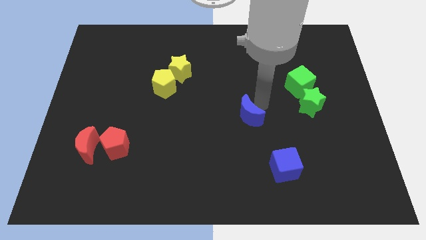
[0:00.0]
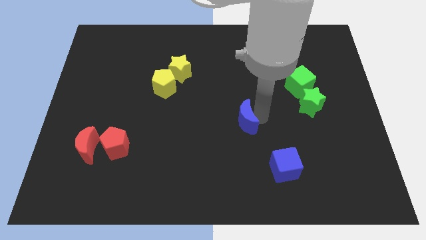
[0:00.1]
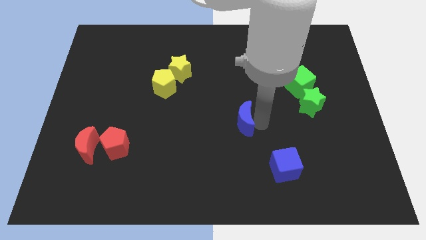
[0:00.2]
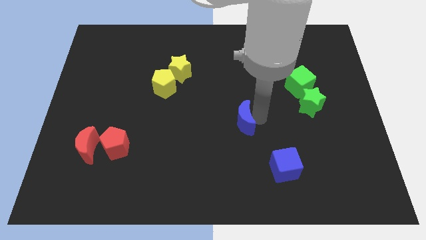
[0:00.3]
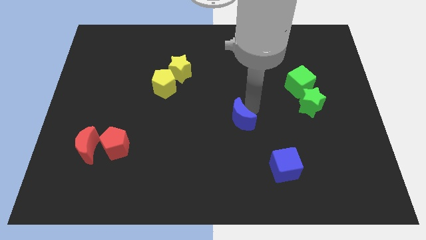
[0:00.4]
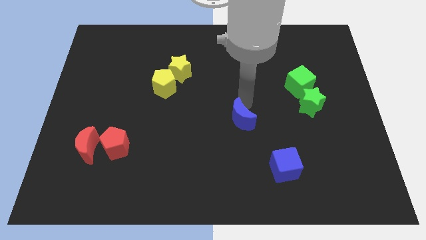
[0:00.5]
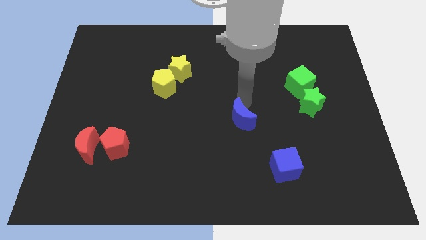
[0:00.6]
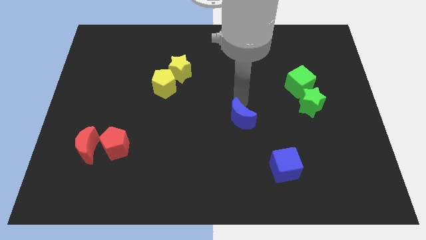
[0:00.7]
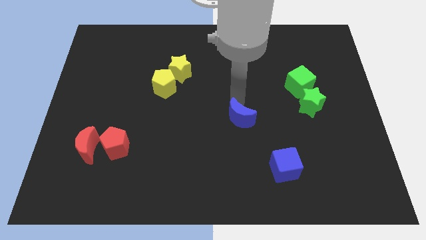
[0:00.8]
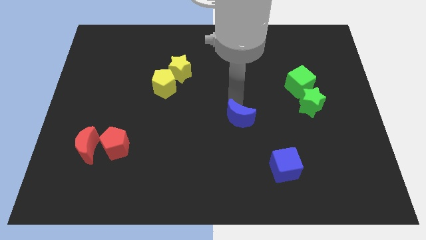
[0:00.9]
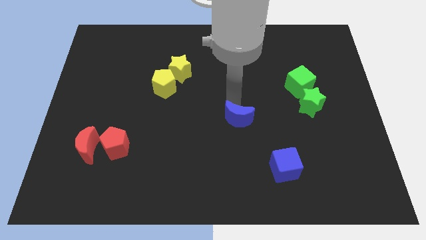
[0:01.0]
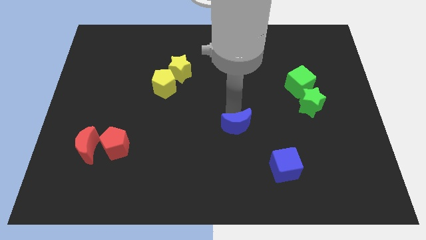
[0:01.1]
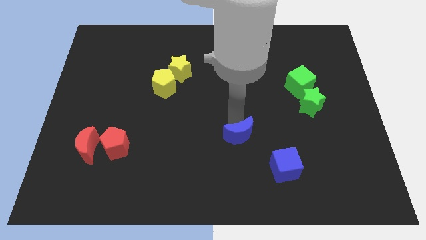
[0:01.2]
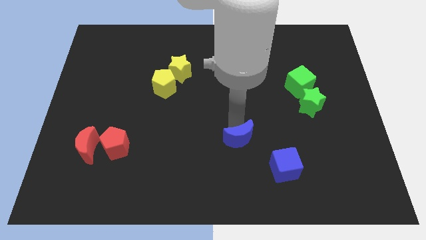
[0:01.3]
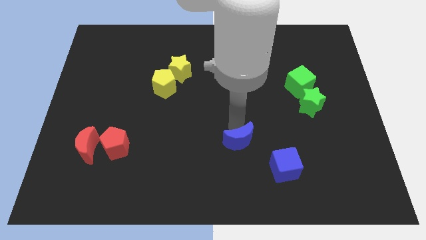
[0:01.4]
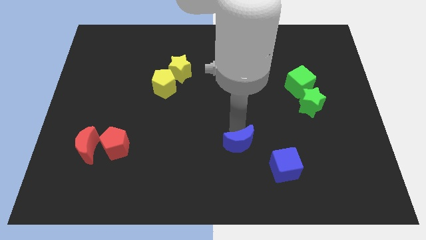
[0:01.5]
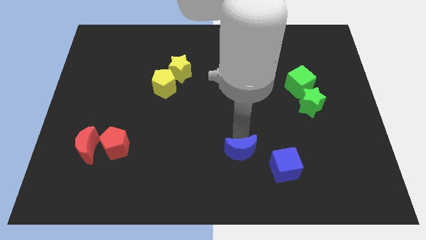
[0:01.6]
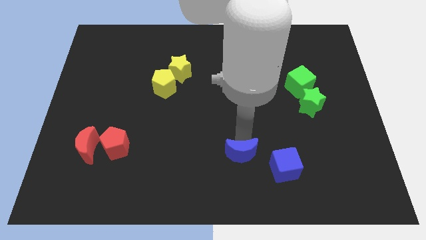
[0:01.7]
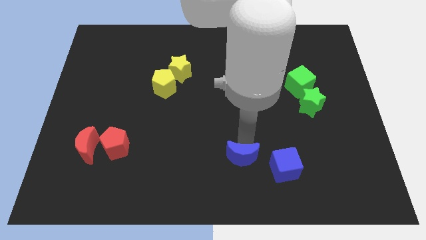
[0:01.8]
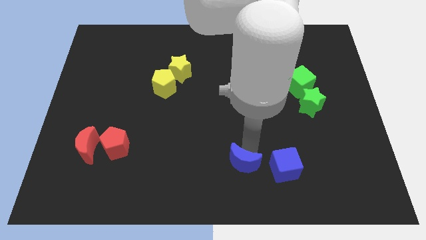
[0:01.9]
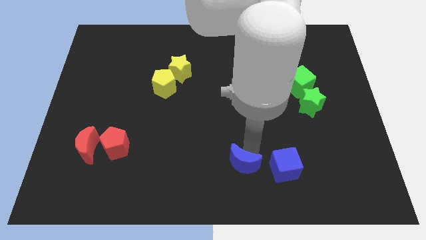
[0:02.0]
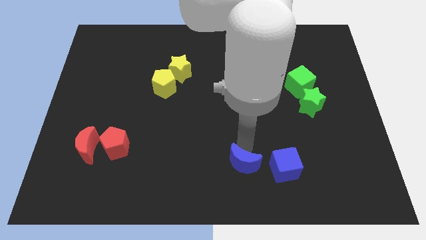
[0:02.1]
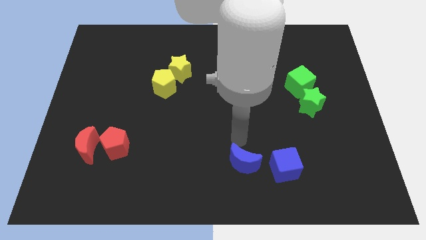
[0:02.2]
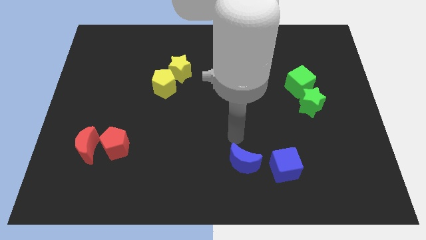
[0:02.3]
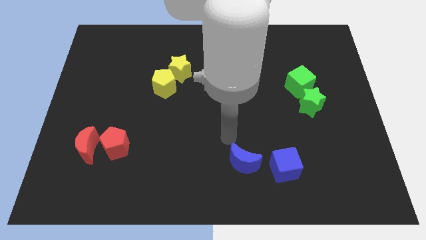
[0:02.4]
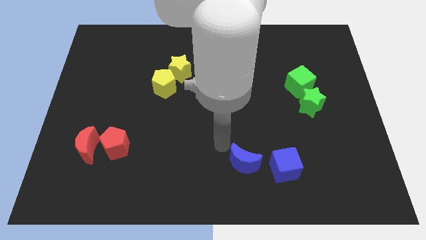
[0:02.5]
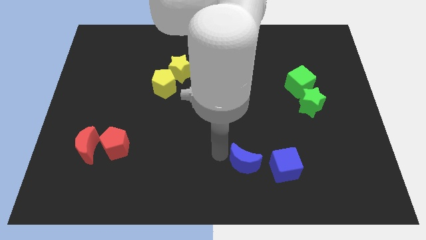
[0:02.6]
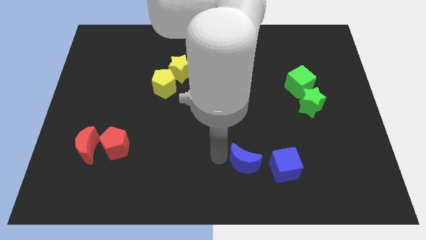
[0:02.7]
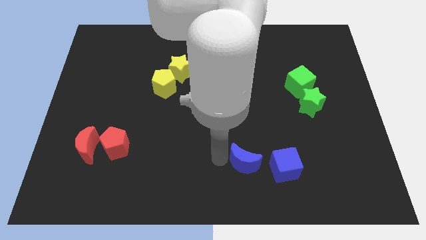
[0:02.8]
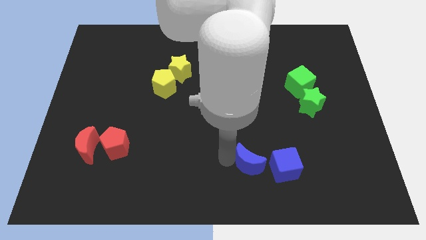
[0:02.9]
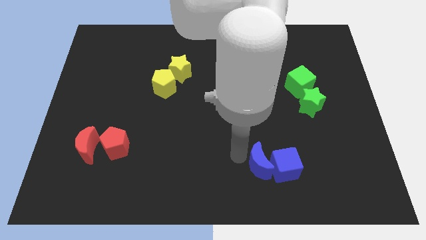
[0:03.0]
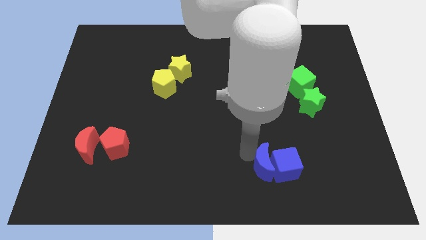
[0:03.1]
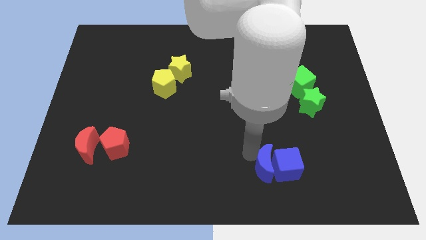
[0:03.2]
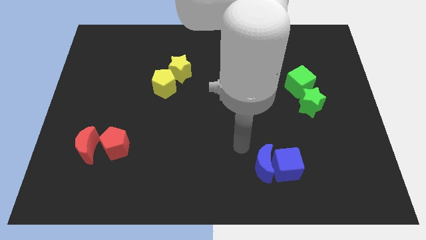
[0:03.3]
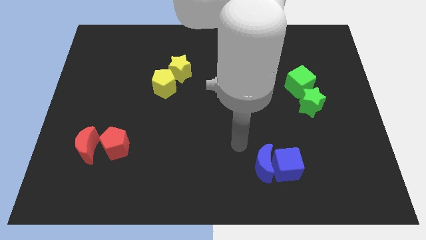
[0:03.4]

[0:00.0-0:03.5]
drag the blue moon into the blue cube

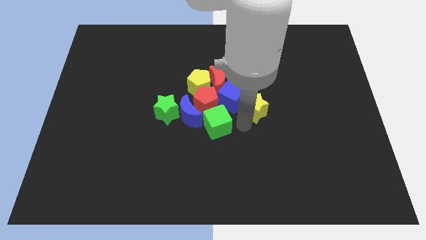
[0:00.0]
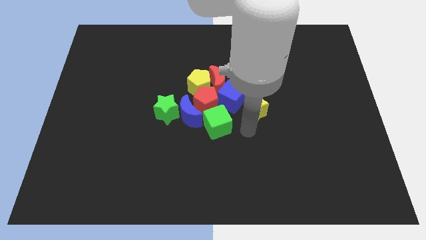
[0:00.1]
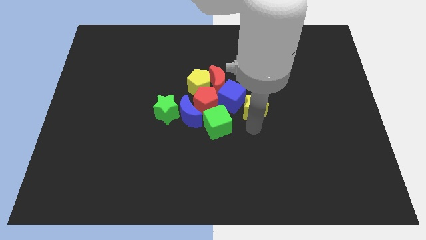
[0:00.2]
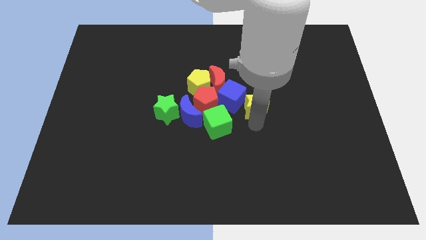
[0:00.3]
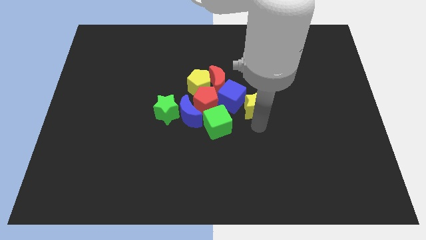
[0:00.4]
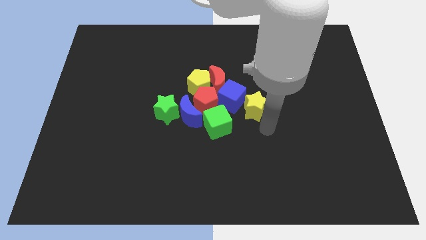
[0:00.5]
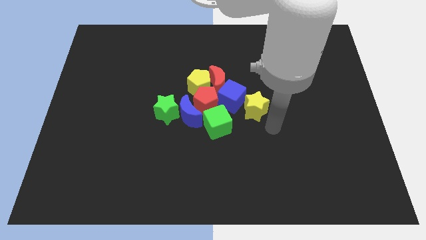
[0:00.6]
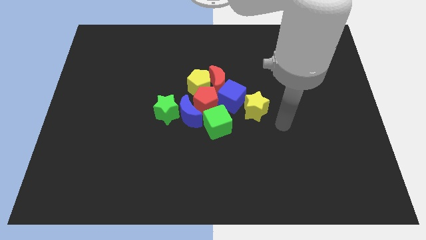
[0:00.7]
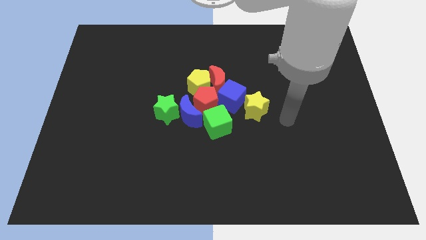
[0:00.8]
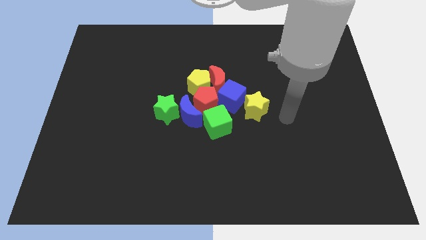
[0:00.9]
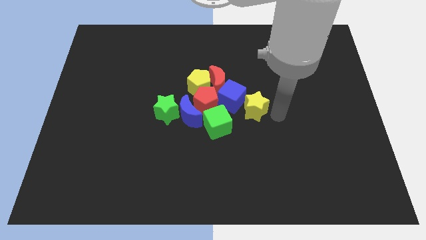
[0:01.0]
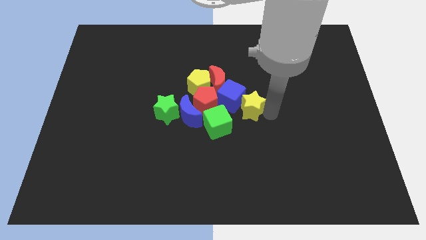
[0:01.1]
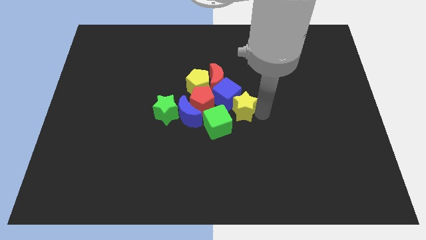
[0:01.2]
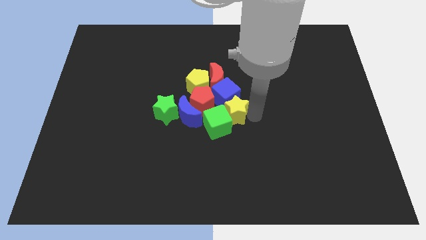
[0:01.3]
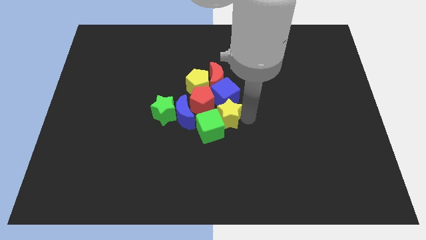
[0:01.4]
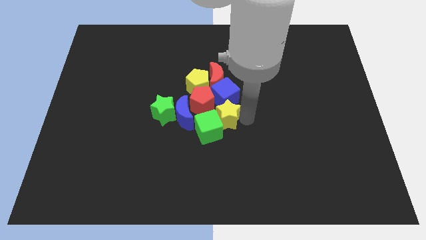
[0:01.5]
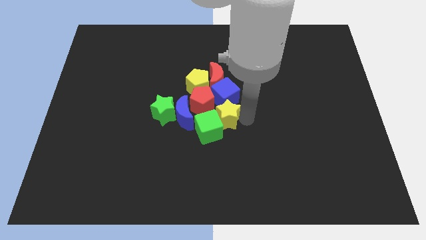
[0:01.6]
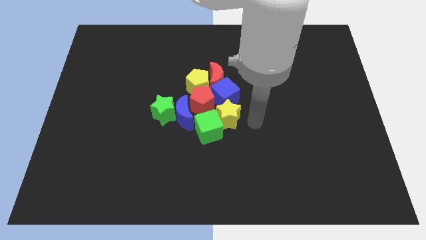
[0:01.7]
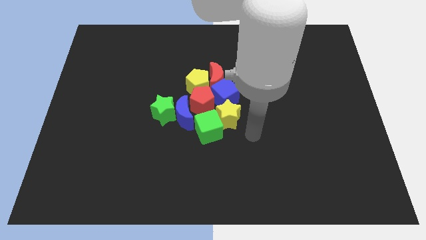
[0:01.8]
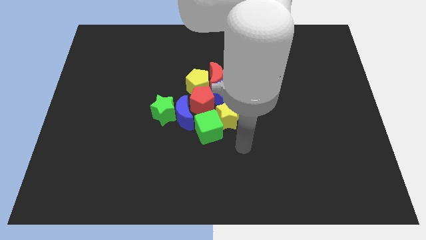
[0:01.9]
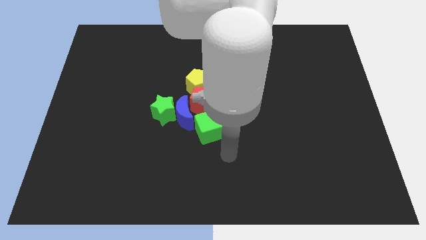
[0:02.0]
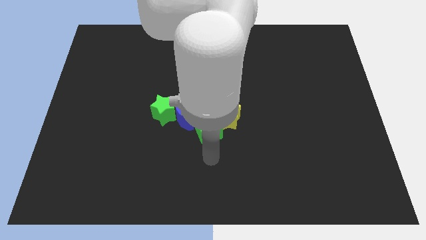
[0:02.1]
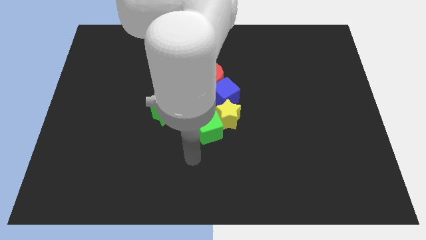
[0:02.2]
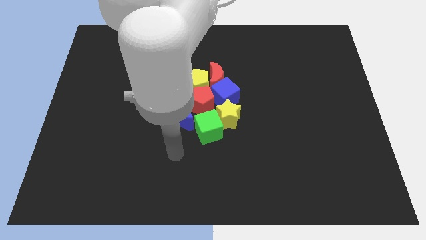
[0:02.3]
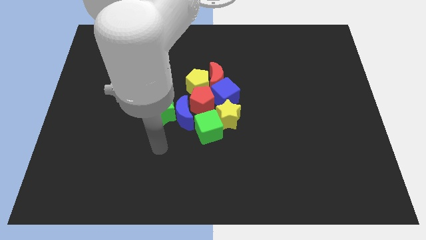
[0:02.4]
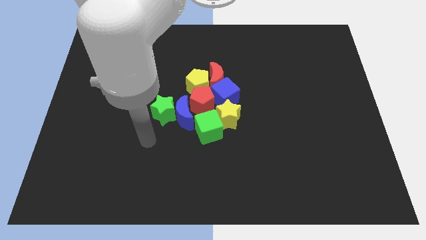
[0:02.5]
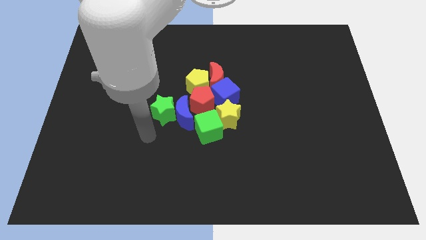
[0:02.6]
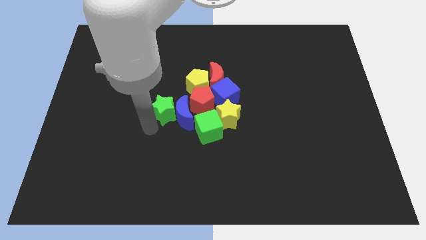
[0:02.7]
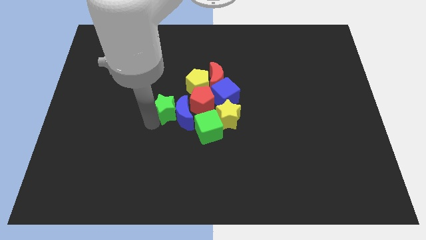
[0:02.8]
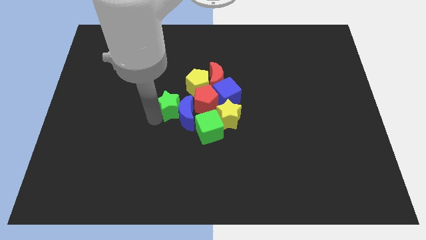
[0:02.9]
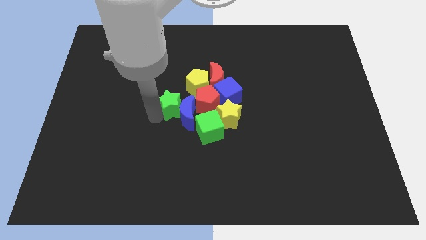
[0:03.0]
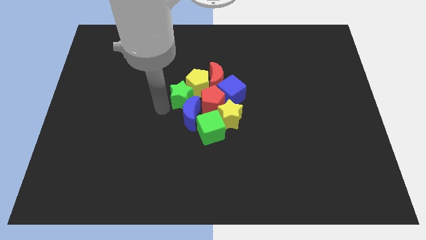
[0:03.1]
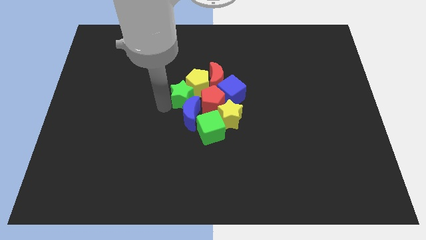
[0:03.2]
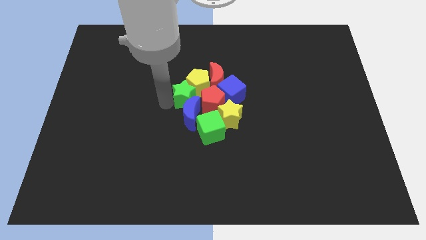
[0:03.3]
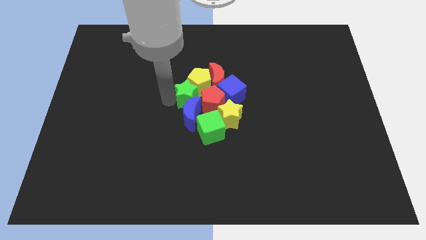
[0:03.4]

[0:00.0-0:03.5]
make a group of blocks

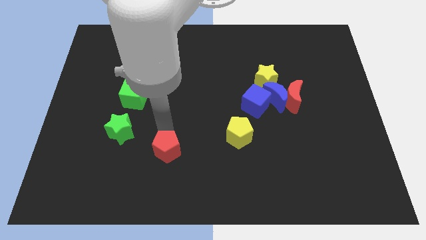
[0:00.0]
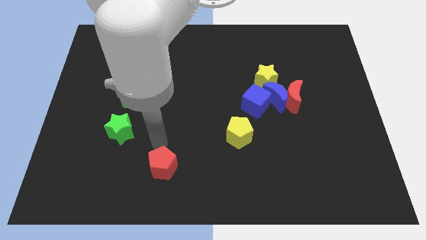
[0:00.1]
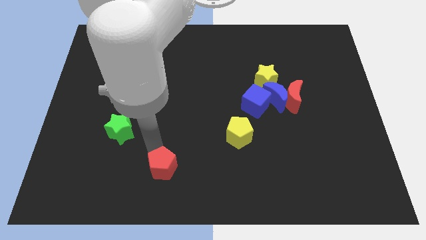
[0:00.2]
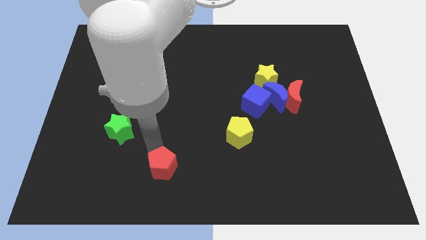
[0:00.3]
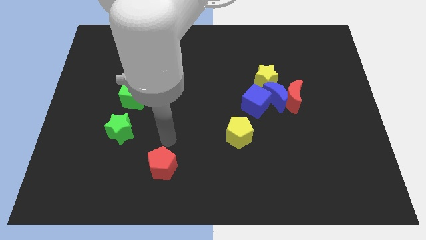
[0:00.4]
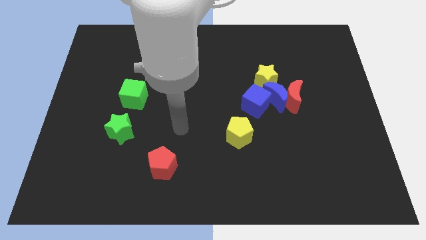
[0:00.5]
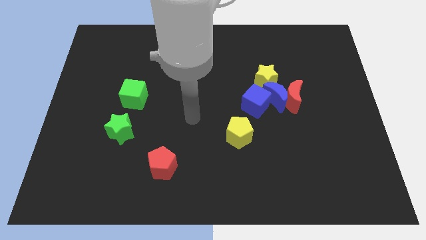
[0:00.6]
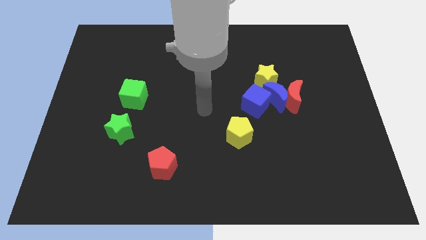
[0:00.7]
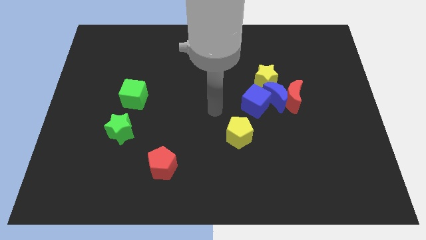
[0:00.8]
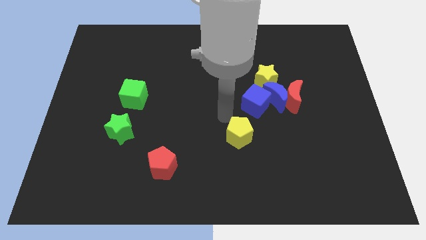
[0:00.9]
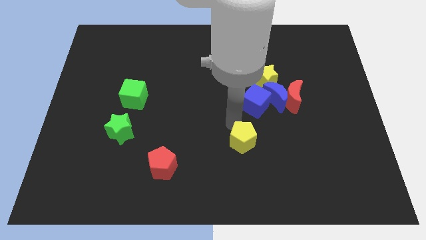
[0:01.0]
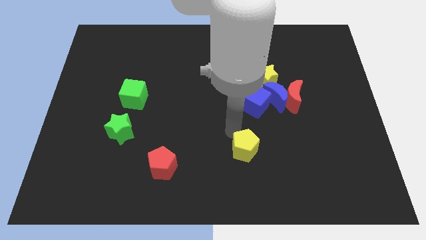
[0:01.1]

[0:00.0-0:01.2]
move red pentagon diagonally right to the green star

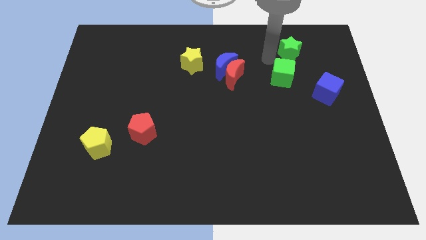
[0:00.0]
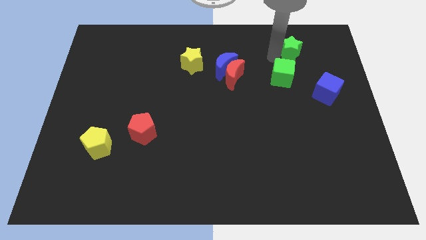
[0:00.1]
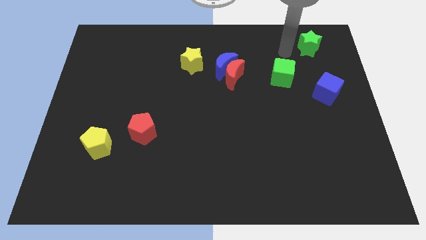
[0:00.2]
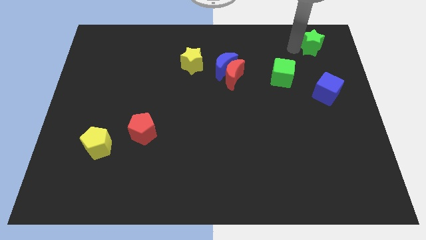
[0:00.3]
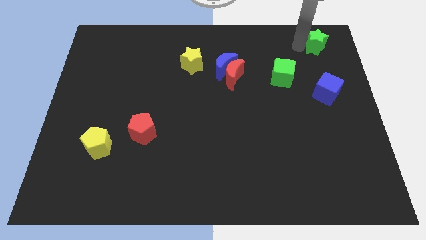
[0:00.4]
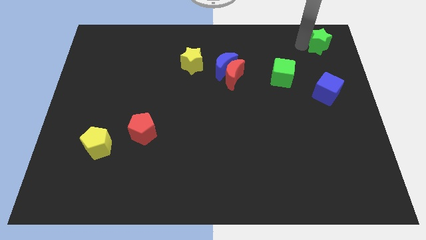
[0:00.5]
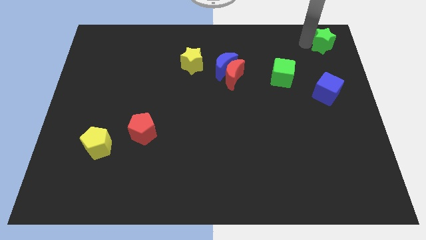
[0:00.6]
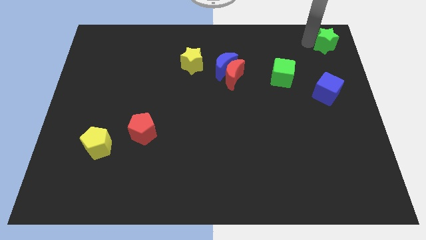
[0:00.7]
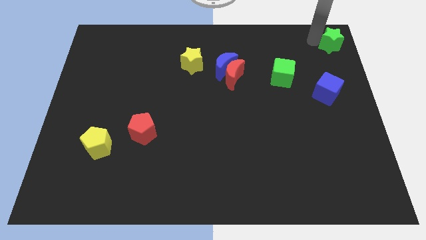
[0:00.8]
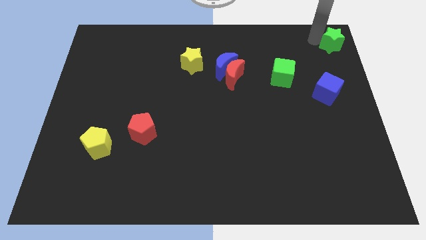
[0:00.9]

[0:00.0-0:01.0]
move the green star to the top right of the board
